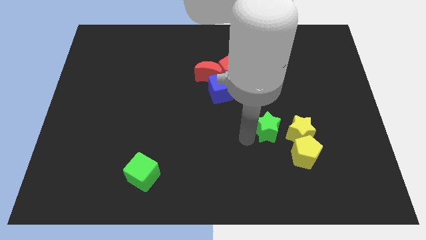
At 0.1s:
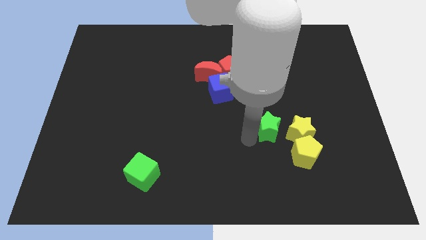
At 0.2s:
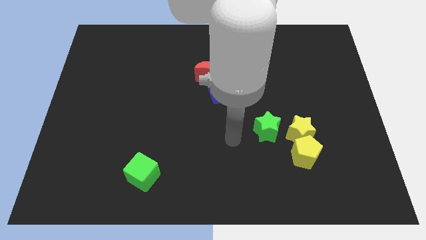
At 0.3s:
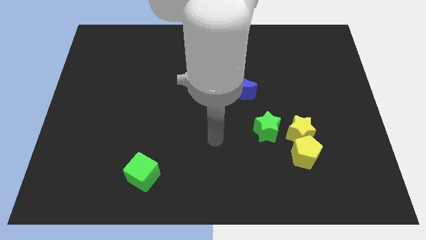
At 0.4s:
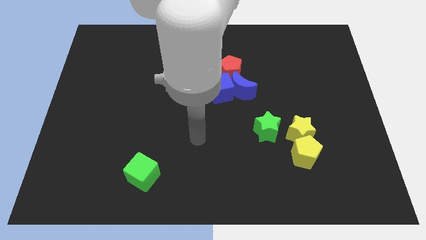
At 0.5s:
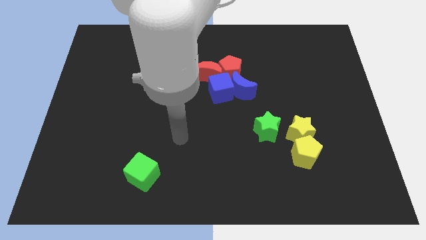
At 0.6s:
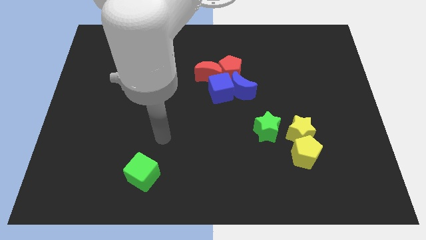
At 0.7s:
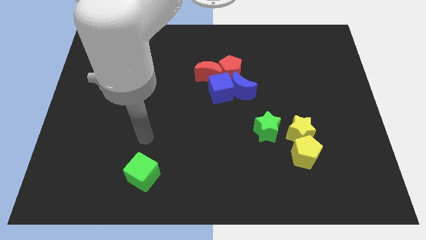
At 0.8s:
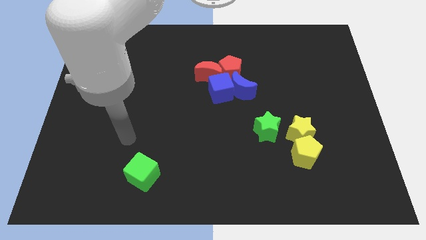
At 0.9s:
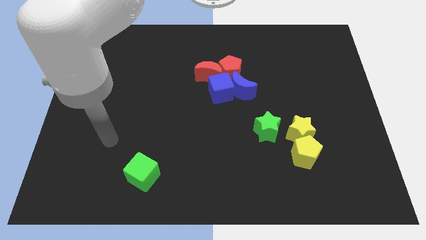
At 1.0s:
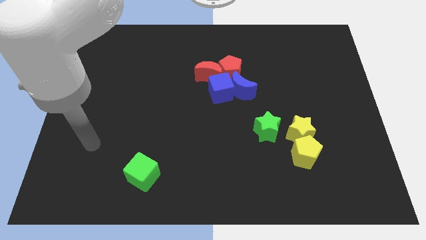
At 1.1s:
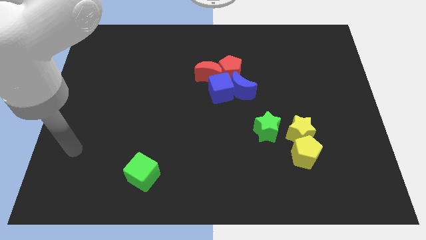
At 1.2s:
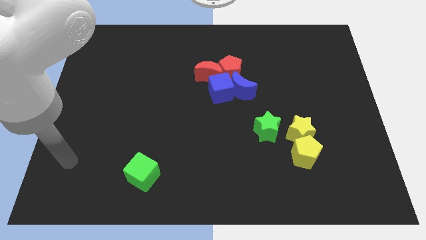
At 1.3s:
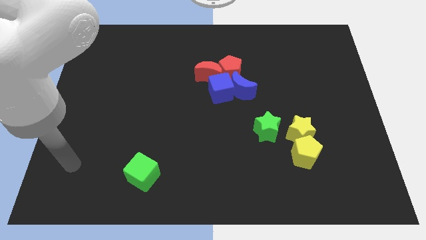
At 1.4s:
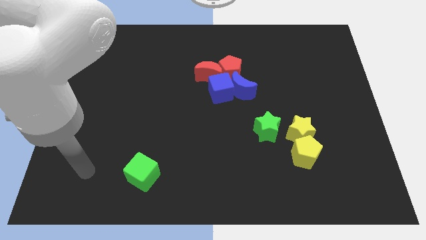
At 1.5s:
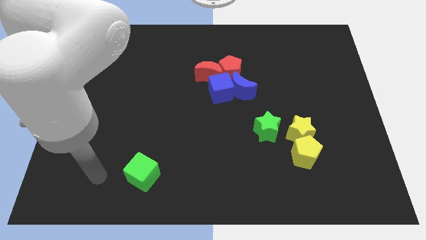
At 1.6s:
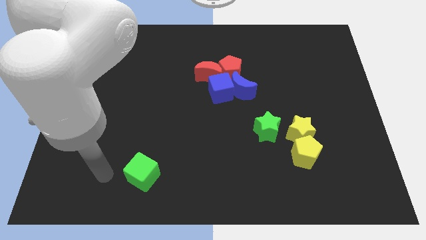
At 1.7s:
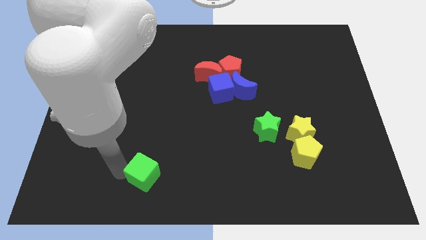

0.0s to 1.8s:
move your arm towards the left of green cube

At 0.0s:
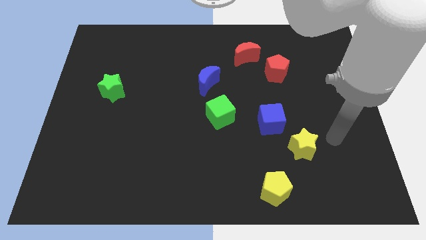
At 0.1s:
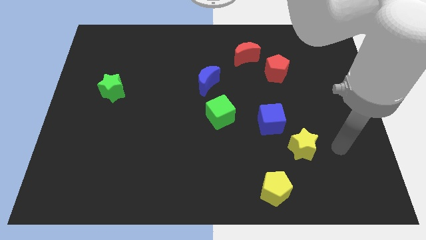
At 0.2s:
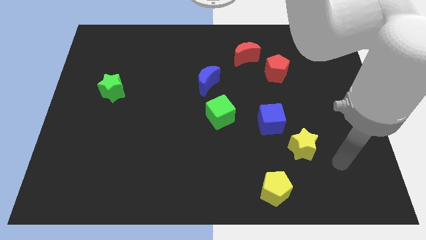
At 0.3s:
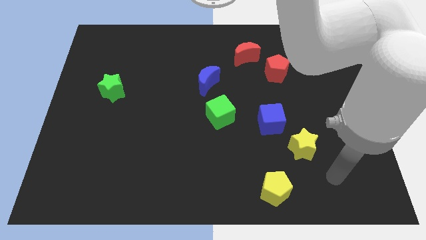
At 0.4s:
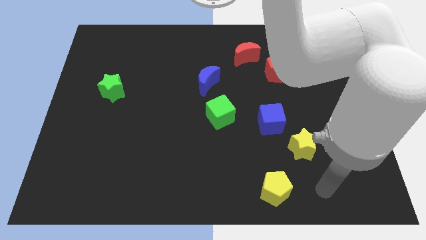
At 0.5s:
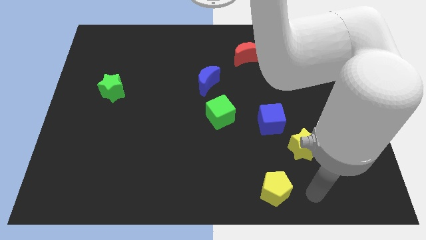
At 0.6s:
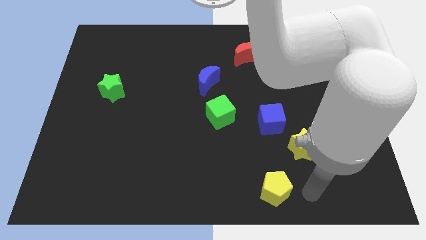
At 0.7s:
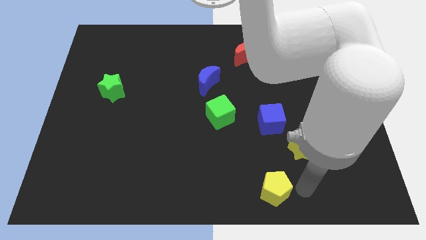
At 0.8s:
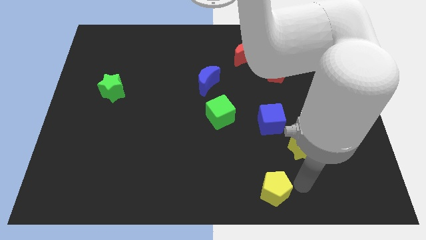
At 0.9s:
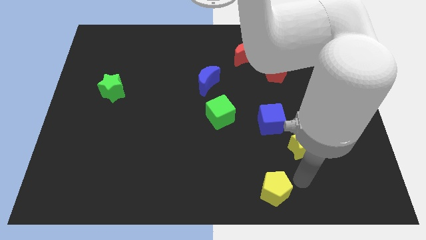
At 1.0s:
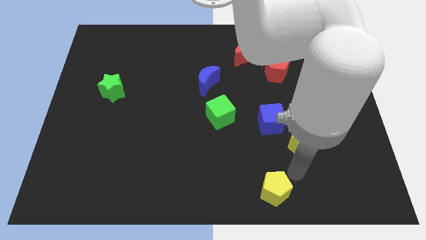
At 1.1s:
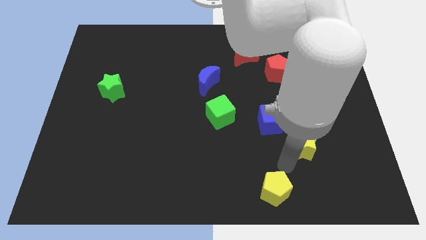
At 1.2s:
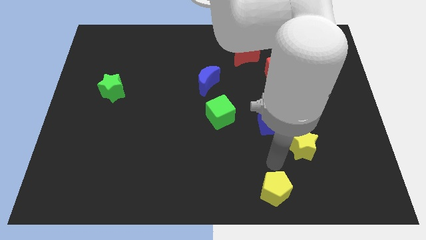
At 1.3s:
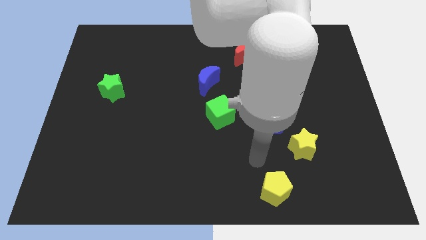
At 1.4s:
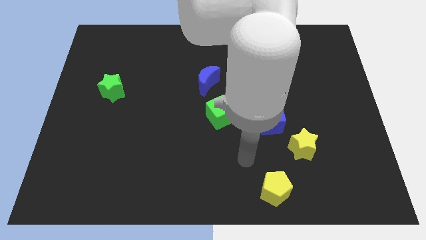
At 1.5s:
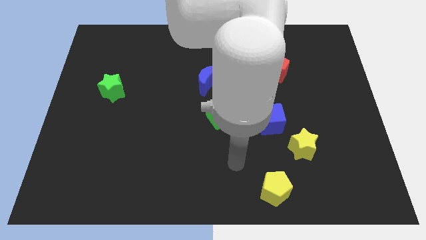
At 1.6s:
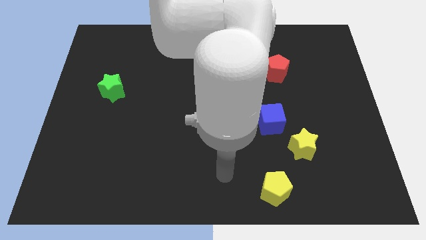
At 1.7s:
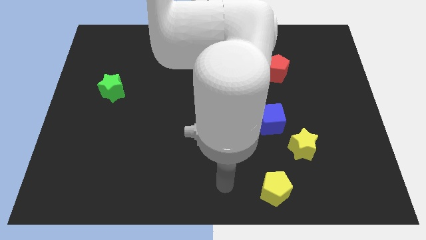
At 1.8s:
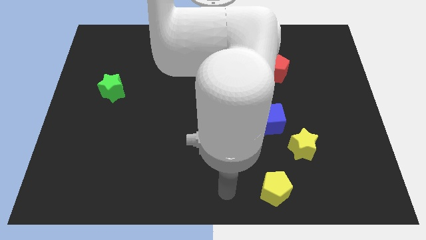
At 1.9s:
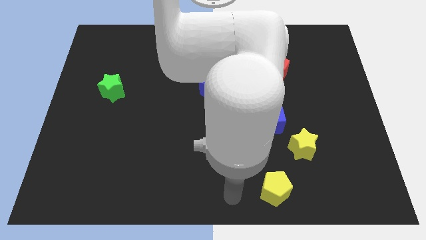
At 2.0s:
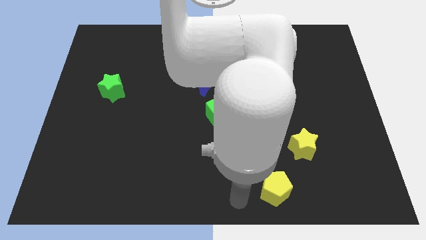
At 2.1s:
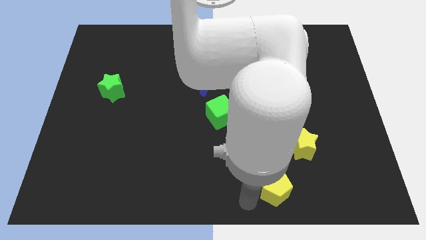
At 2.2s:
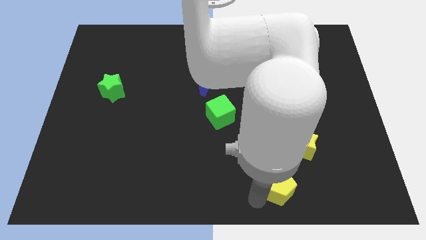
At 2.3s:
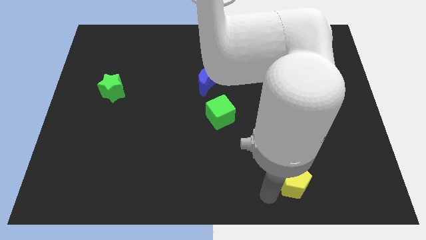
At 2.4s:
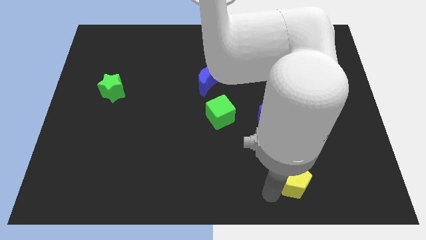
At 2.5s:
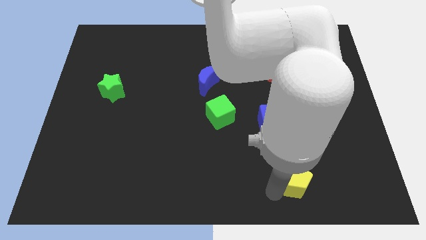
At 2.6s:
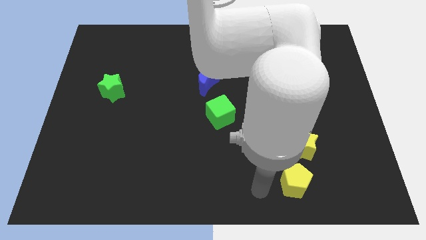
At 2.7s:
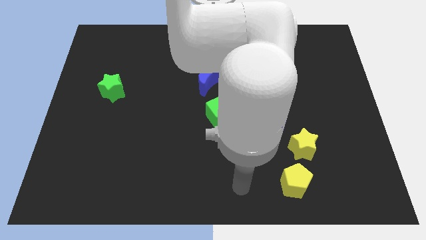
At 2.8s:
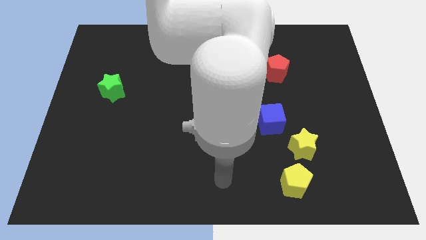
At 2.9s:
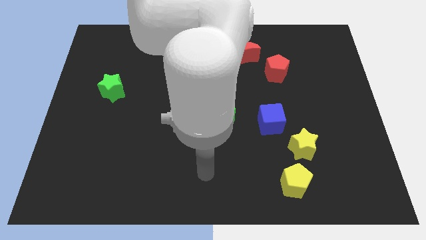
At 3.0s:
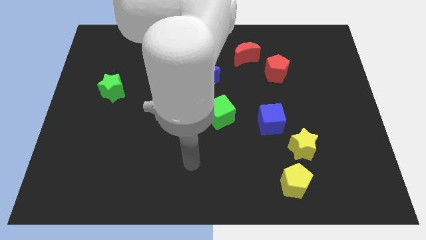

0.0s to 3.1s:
push yellow pentagon towards yellow star

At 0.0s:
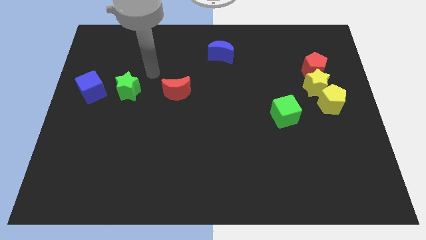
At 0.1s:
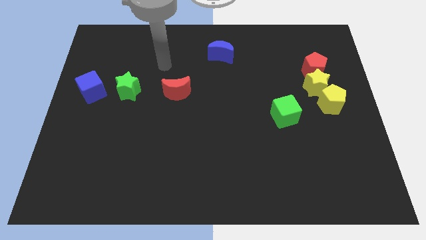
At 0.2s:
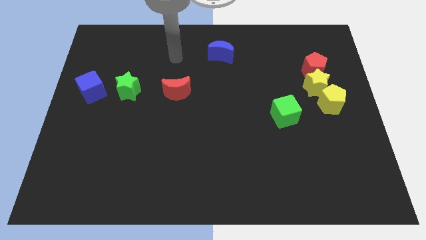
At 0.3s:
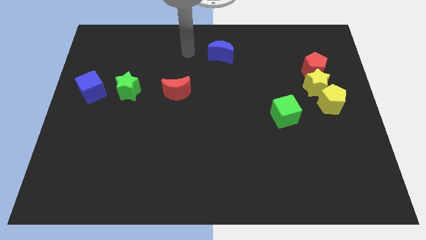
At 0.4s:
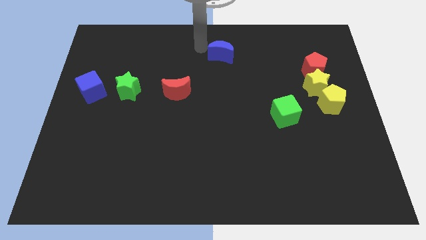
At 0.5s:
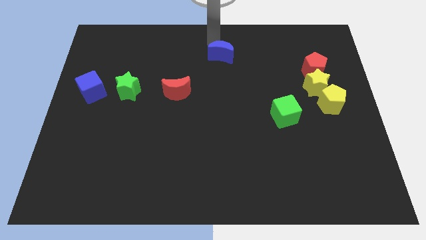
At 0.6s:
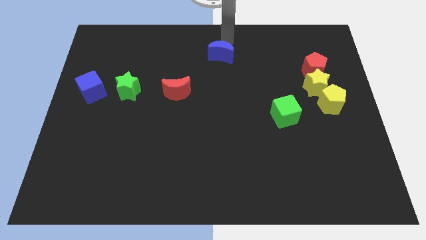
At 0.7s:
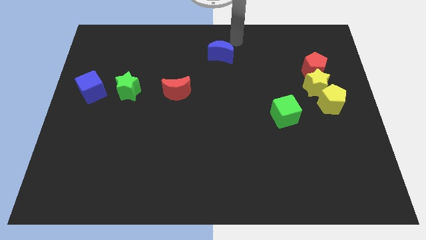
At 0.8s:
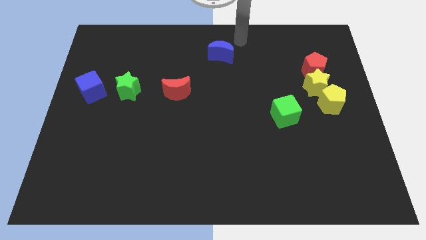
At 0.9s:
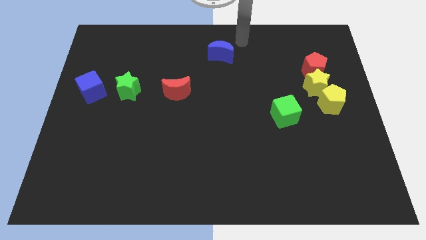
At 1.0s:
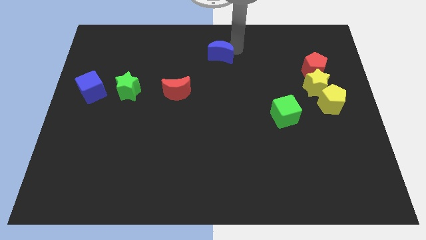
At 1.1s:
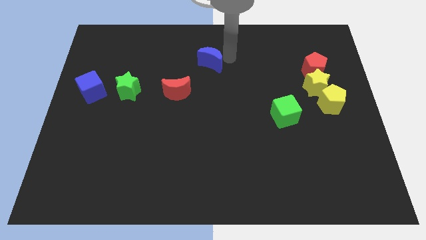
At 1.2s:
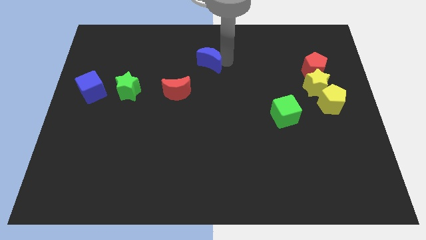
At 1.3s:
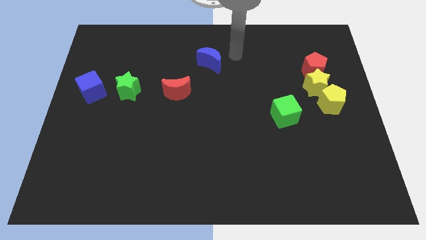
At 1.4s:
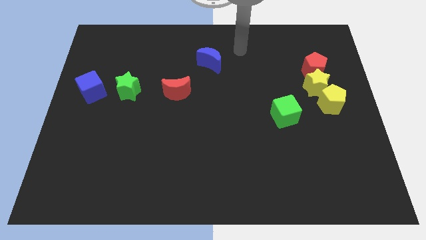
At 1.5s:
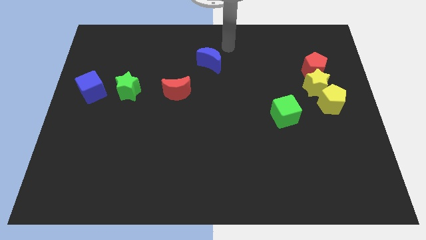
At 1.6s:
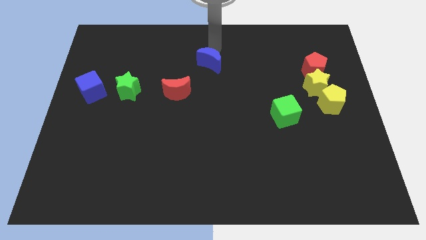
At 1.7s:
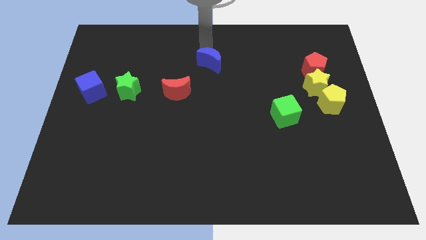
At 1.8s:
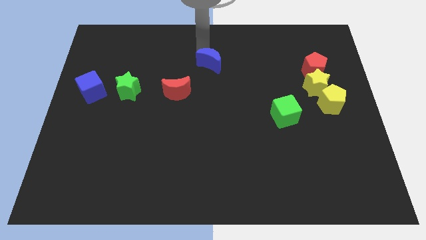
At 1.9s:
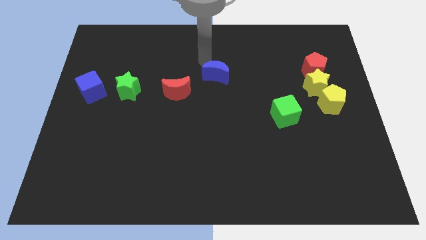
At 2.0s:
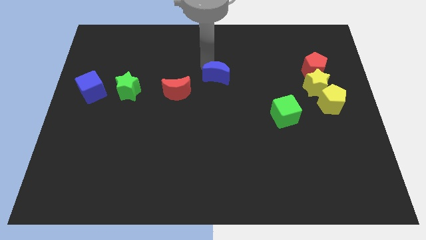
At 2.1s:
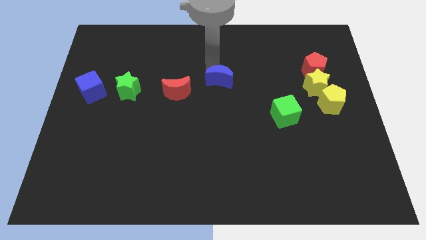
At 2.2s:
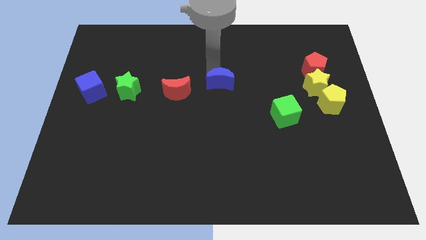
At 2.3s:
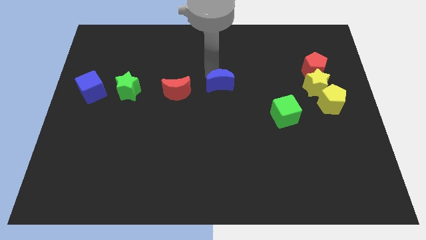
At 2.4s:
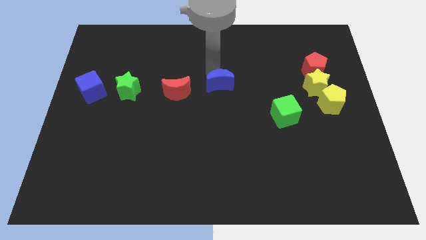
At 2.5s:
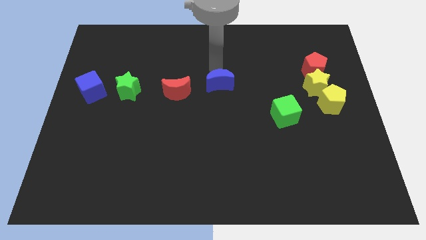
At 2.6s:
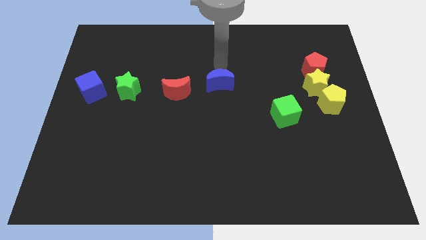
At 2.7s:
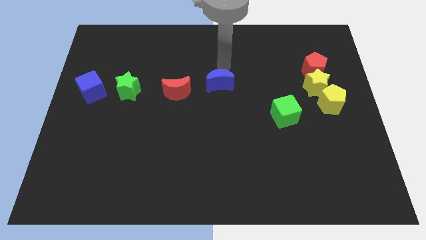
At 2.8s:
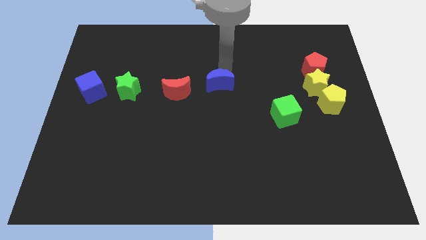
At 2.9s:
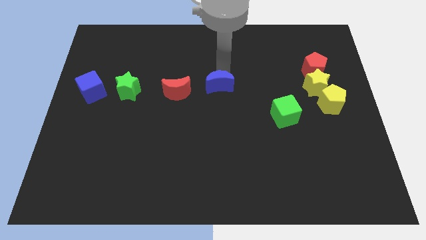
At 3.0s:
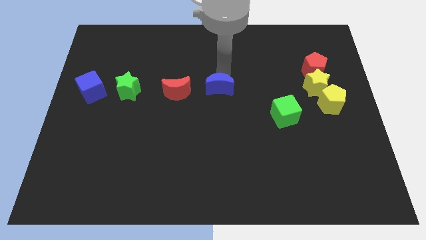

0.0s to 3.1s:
place the blue moon right to the red moon

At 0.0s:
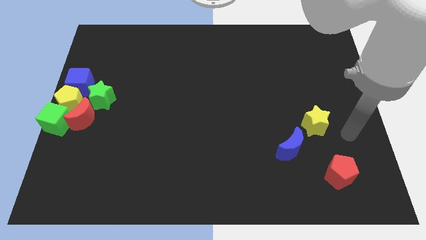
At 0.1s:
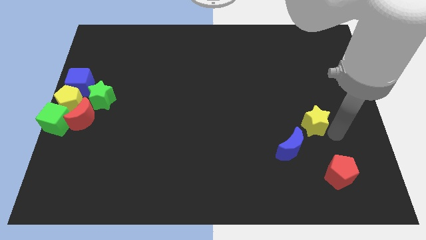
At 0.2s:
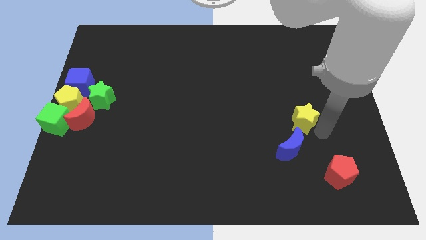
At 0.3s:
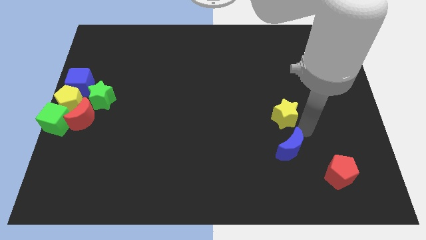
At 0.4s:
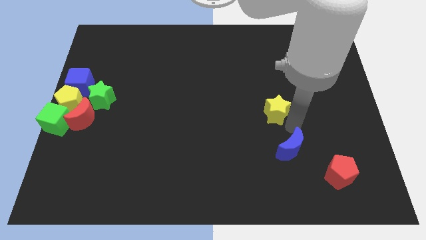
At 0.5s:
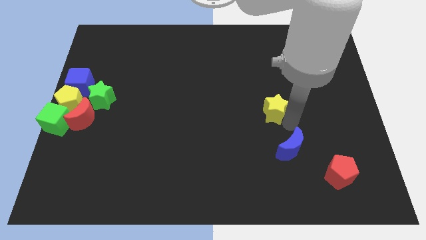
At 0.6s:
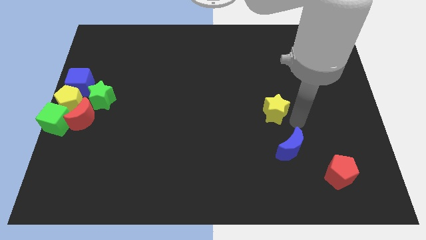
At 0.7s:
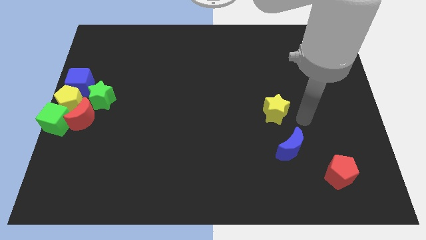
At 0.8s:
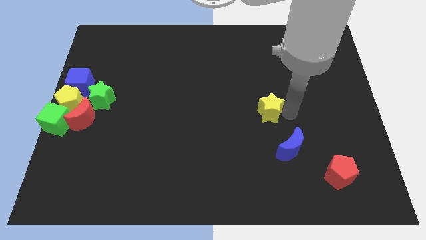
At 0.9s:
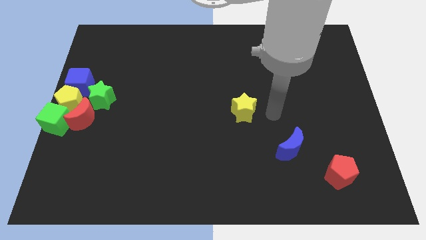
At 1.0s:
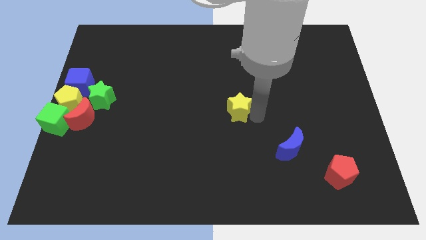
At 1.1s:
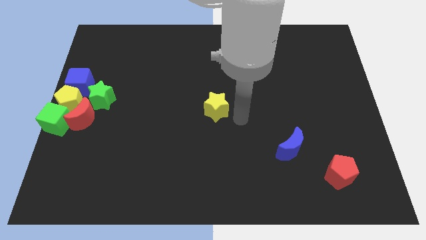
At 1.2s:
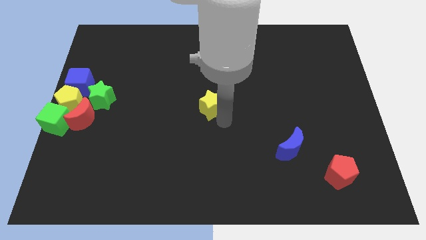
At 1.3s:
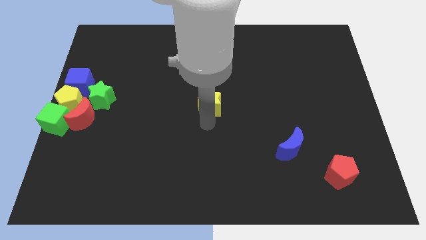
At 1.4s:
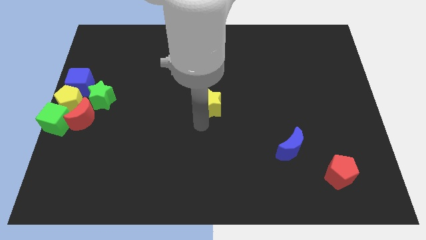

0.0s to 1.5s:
push the yellow star at the center
